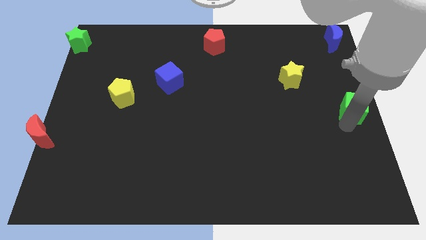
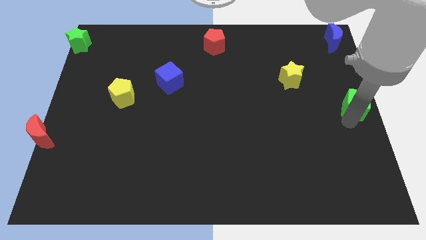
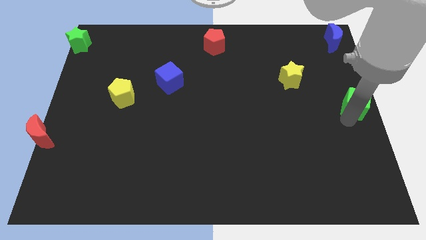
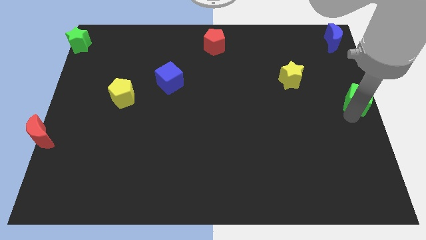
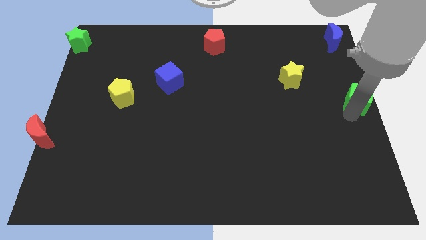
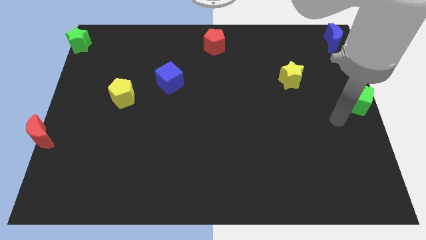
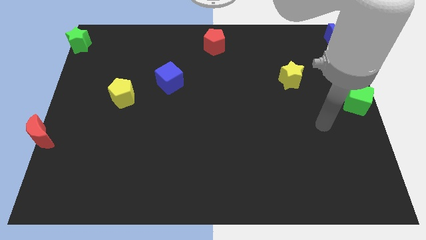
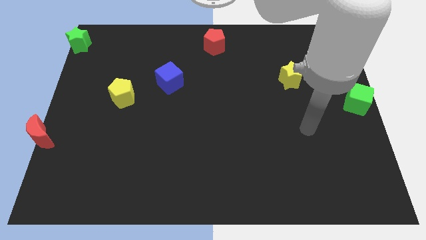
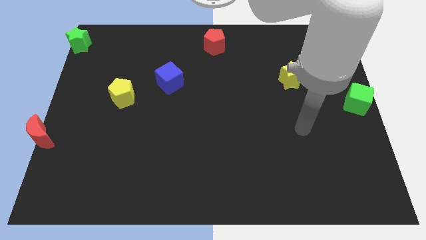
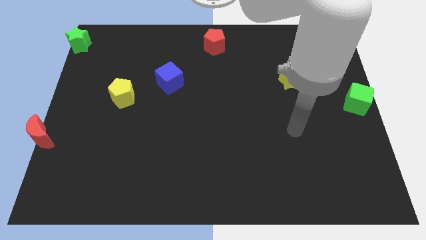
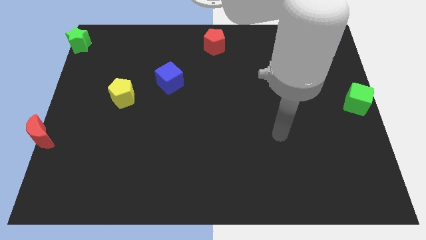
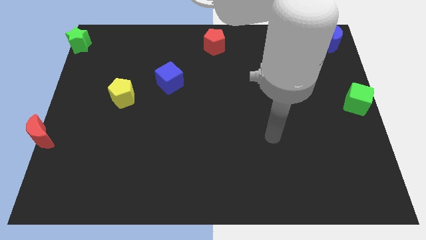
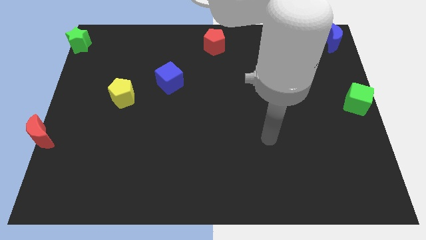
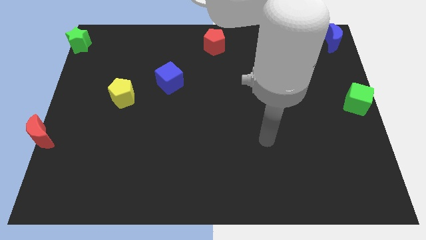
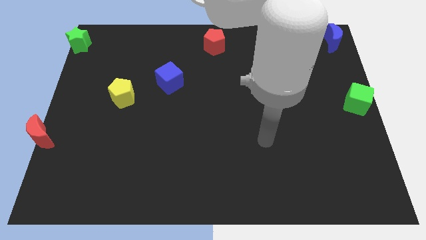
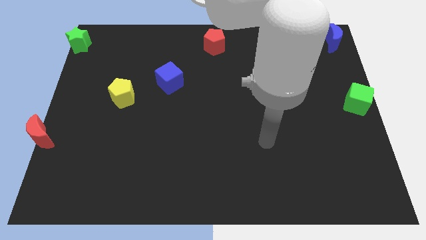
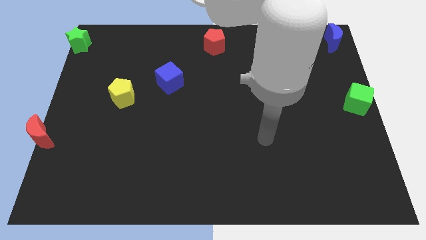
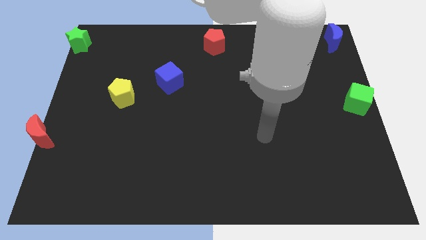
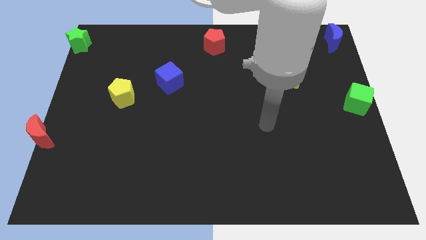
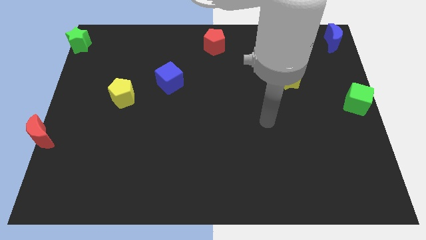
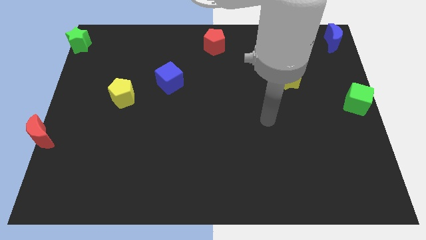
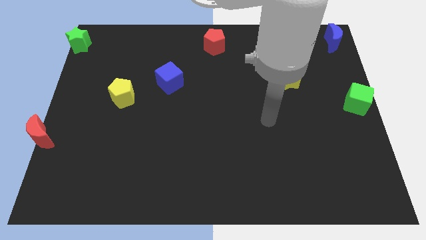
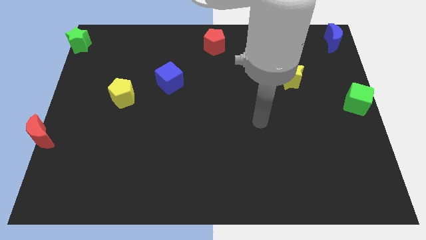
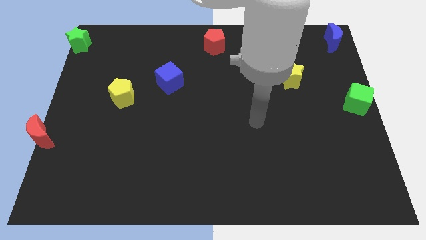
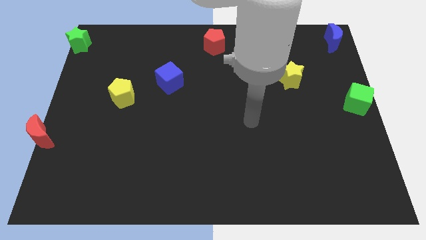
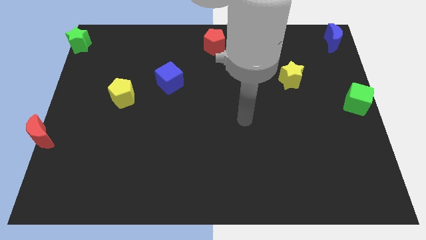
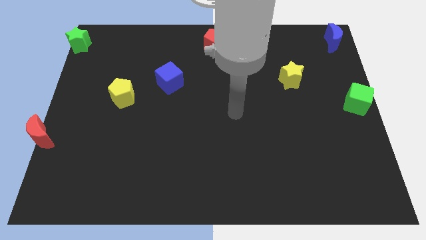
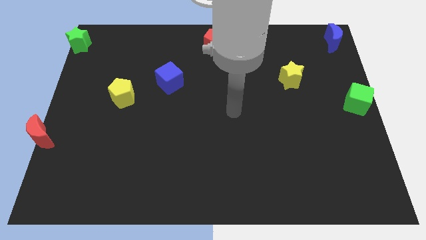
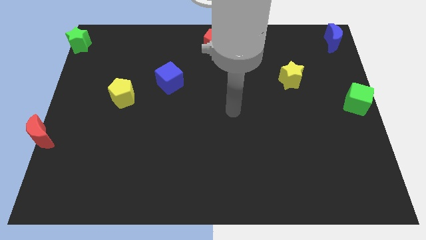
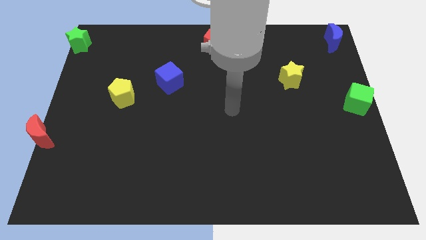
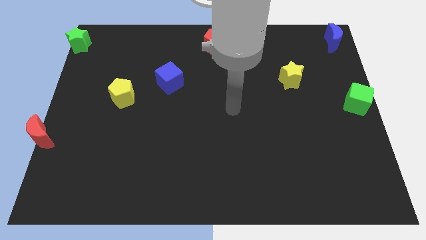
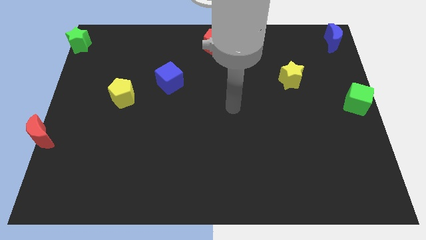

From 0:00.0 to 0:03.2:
place the arm at the center of the board

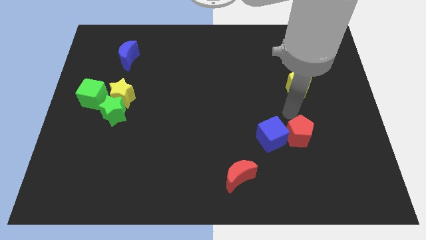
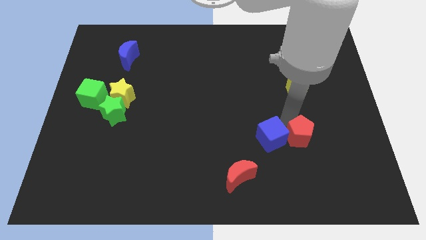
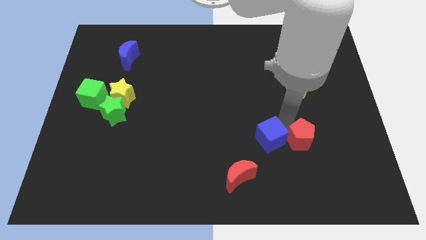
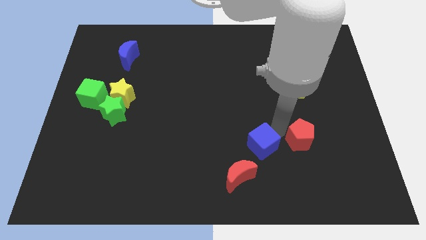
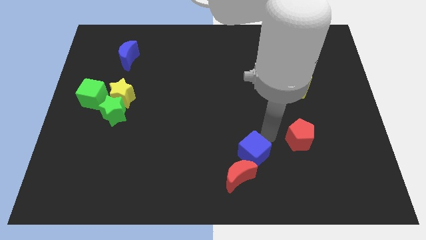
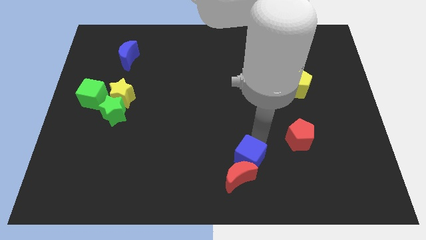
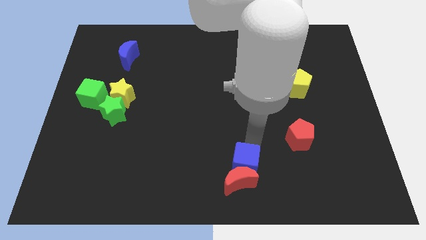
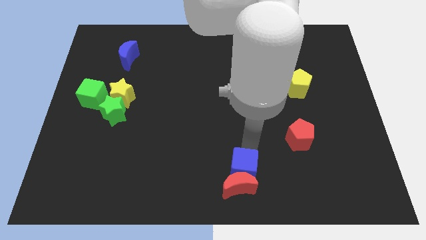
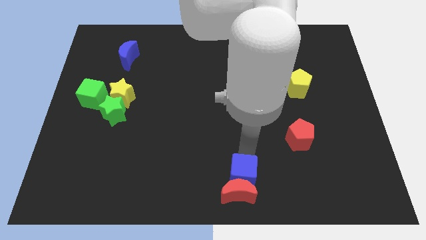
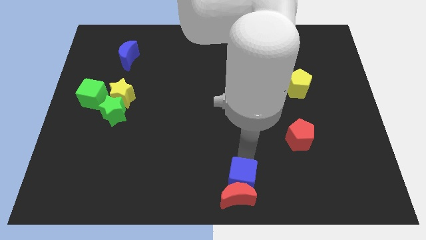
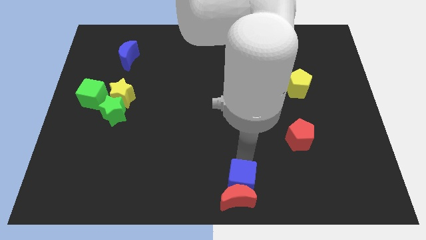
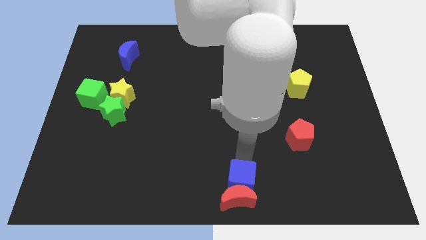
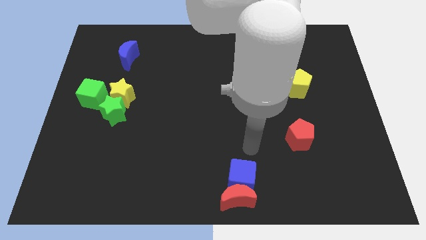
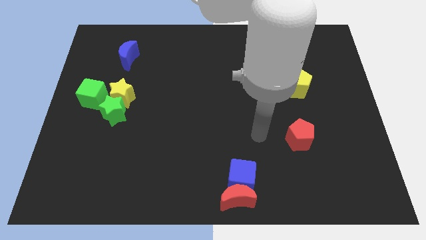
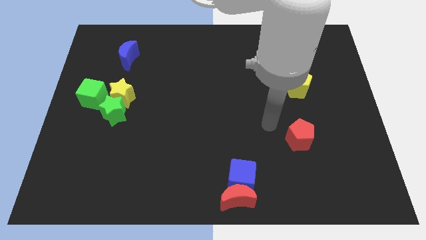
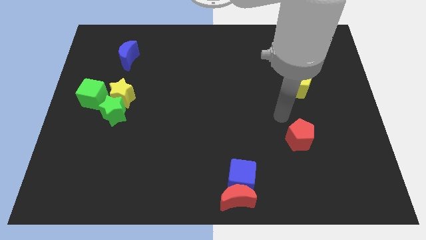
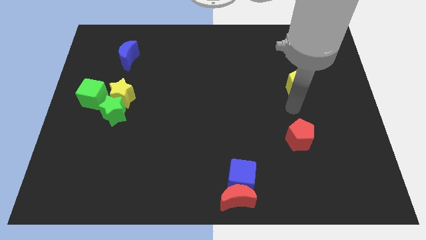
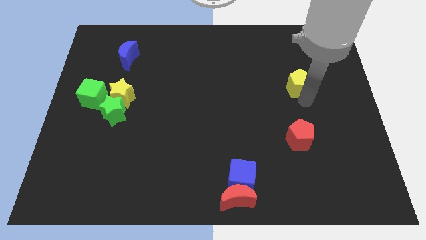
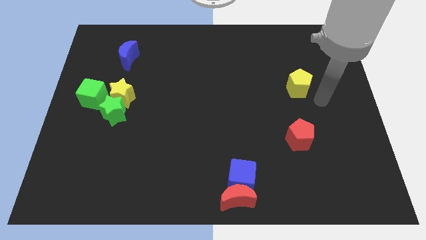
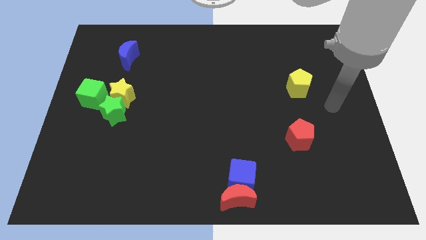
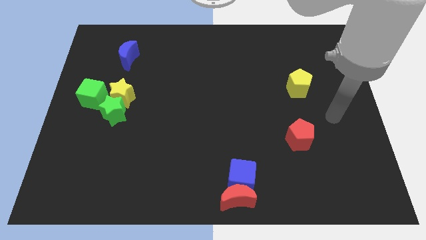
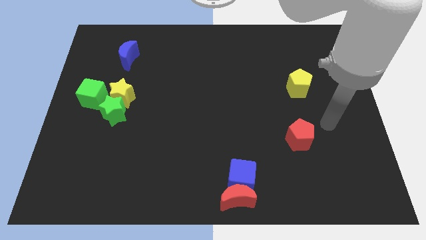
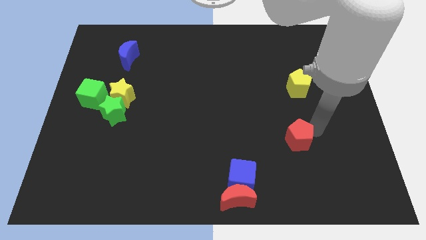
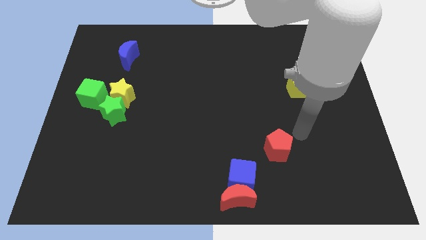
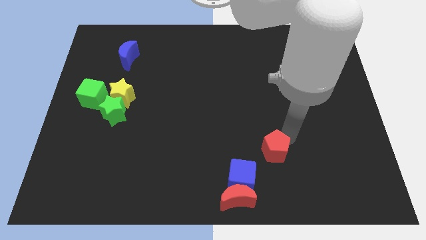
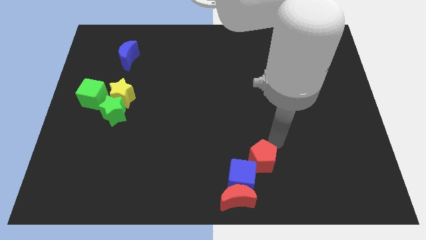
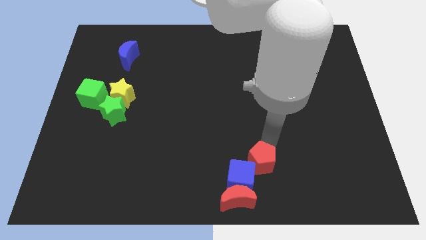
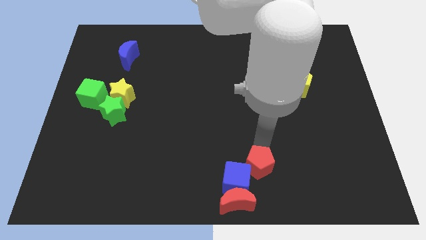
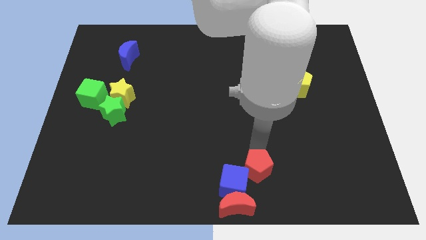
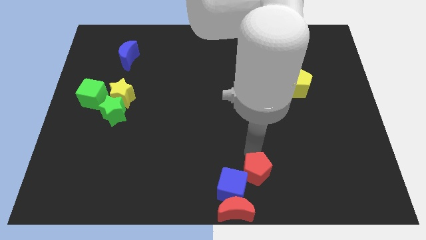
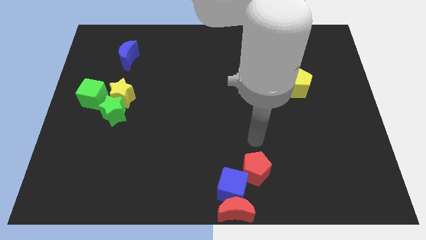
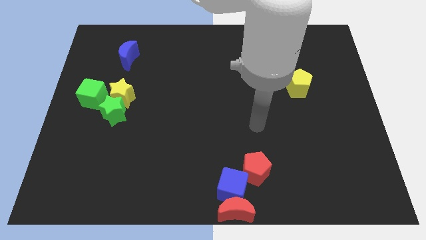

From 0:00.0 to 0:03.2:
move the blue cube and red pentagon into the red moon

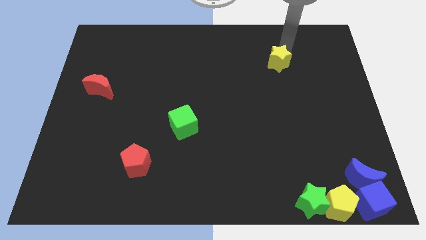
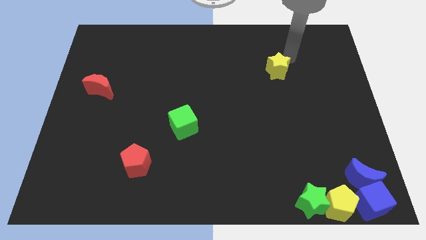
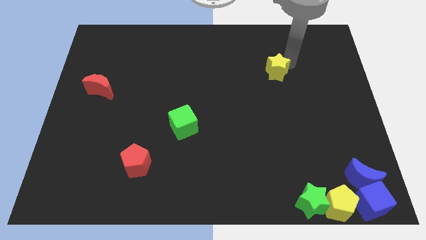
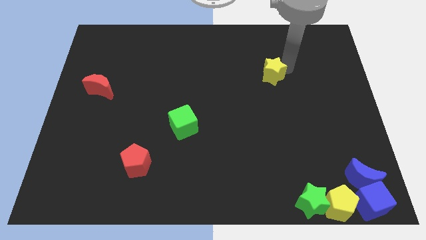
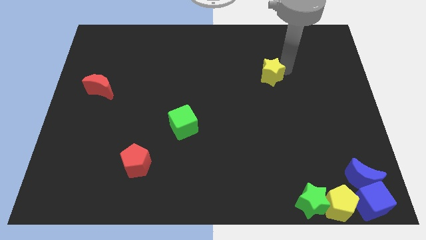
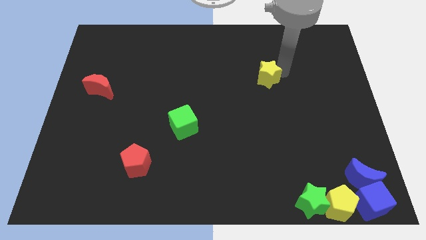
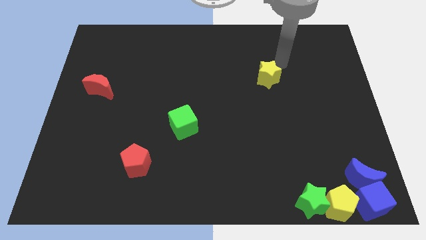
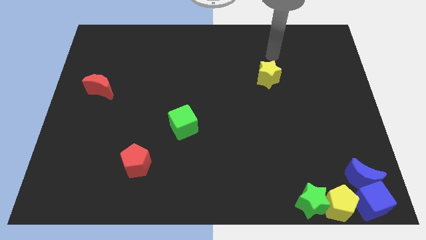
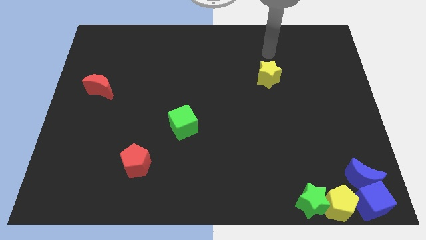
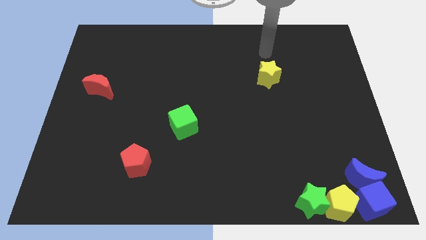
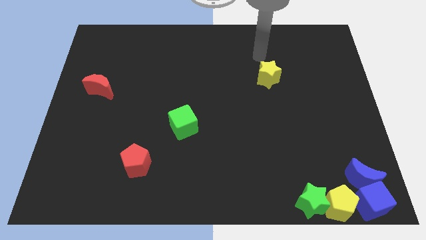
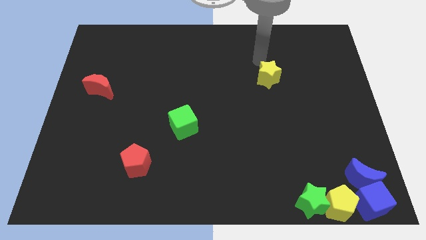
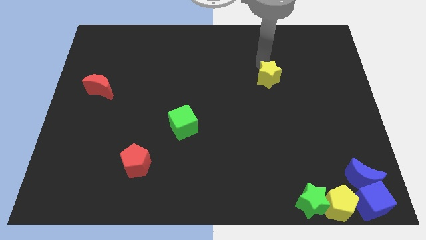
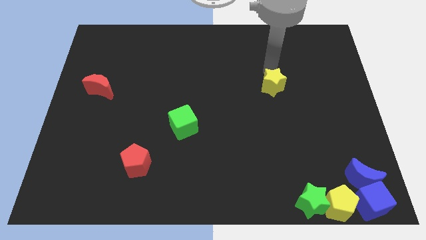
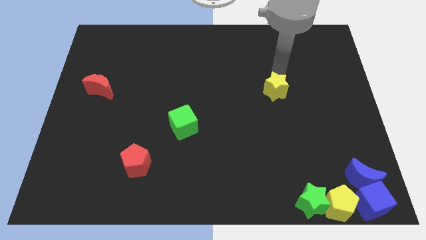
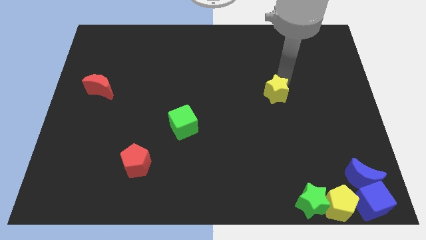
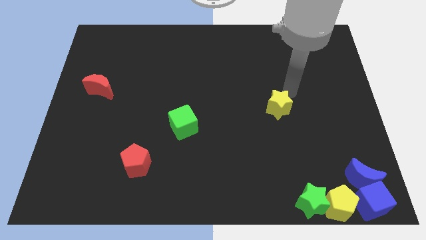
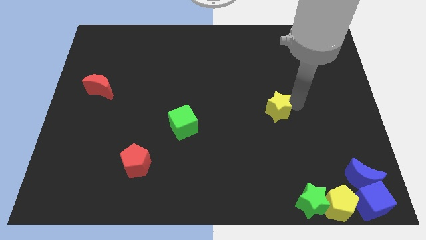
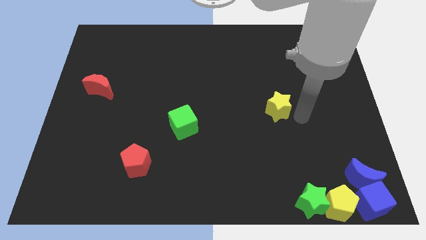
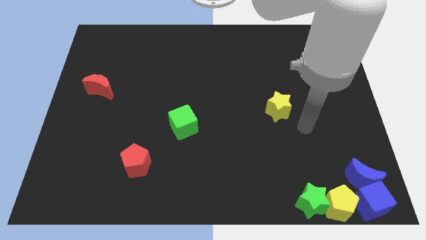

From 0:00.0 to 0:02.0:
slide the yellow star to the center

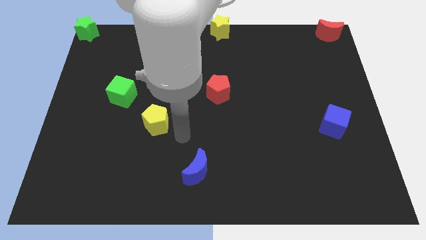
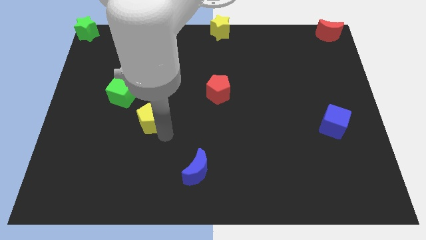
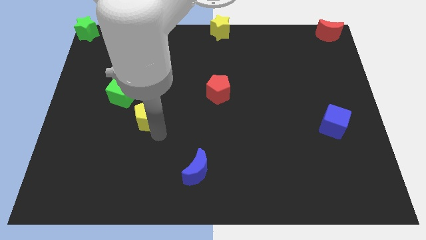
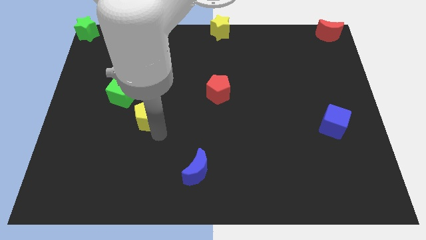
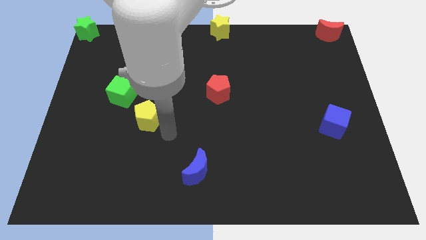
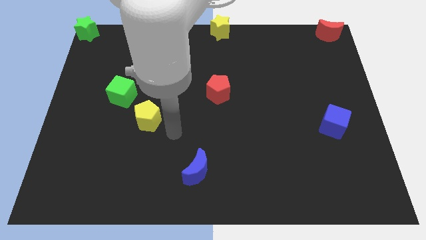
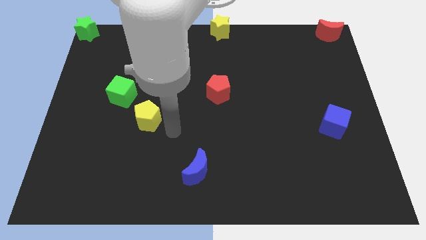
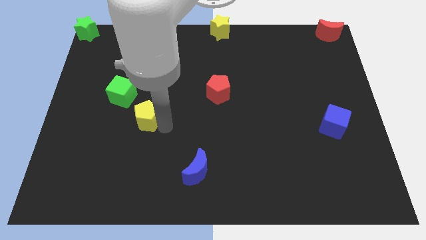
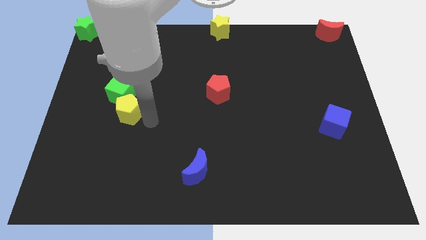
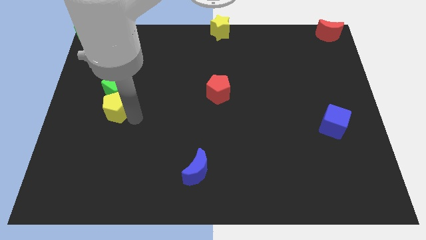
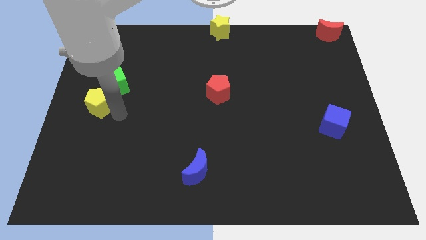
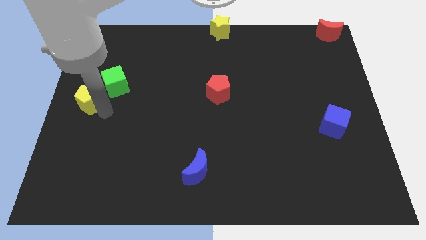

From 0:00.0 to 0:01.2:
move the yellow pentagon into the green cube
